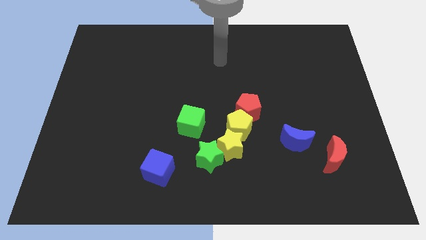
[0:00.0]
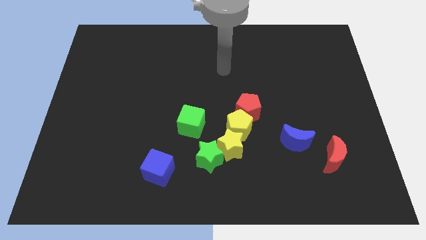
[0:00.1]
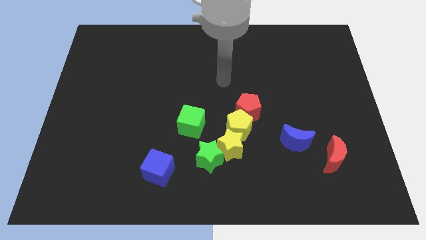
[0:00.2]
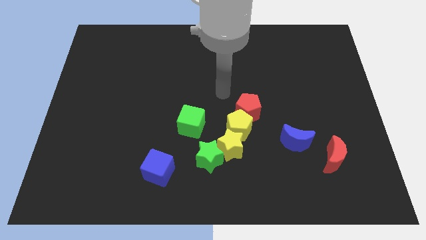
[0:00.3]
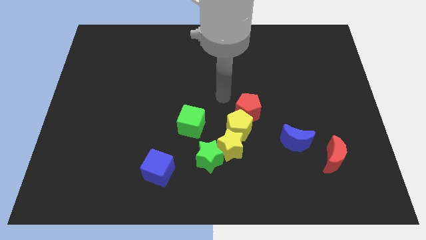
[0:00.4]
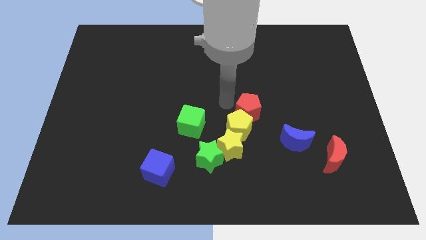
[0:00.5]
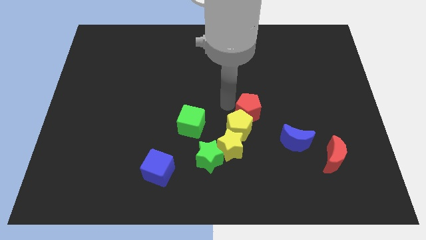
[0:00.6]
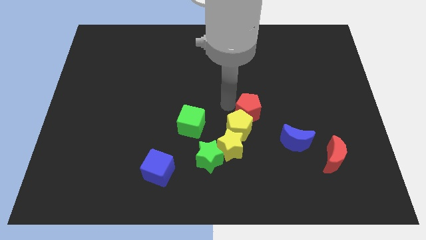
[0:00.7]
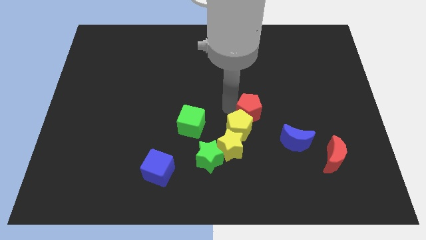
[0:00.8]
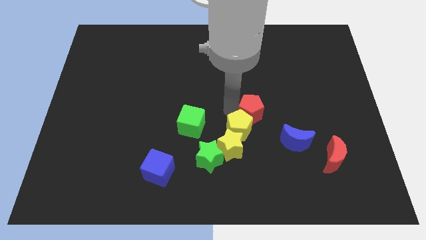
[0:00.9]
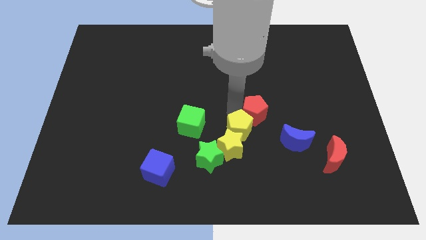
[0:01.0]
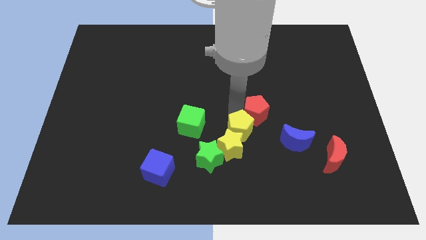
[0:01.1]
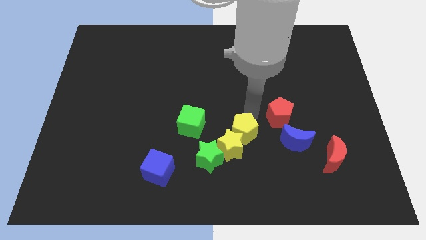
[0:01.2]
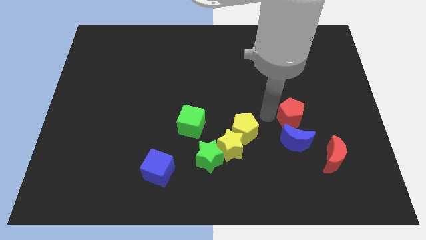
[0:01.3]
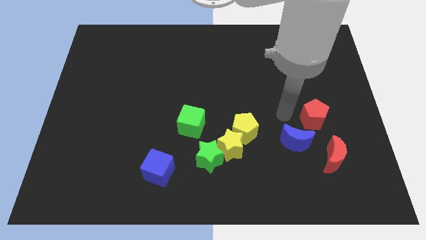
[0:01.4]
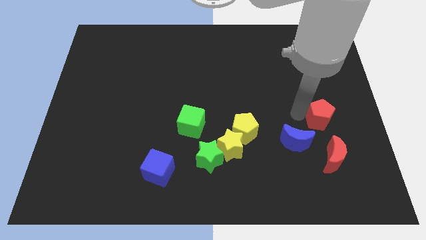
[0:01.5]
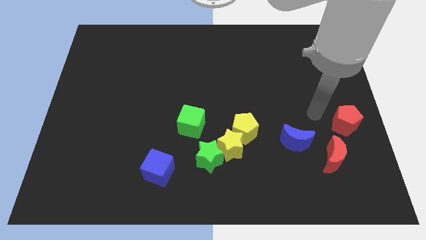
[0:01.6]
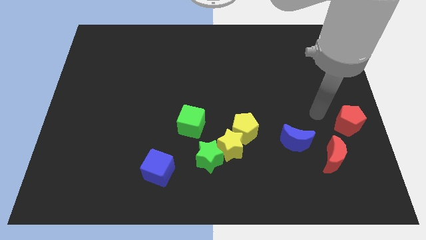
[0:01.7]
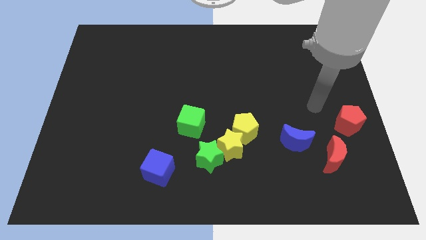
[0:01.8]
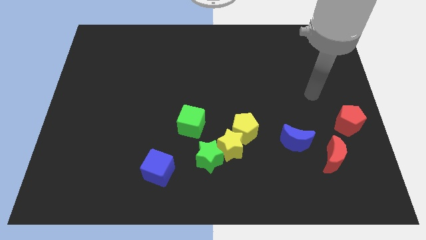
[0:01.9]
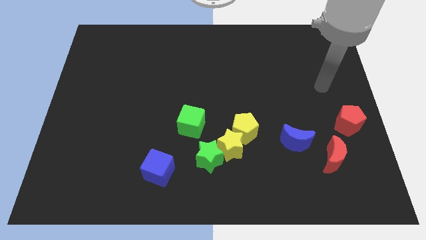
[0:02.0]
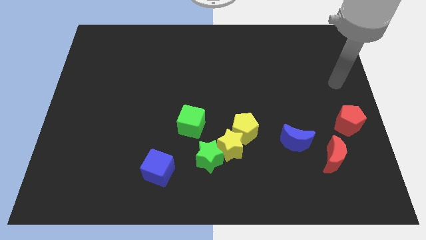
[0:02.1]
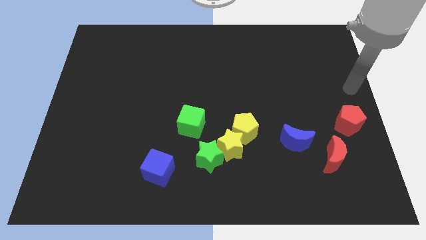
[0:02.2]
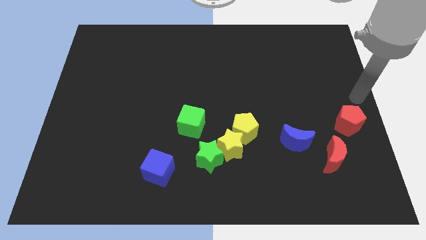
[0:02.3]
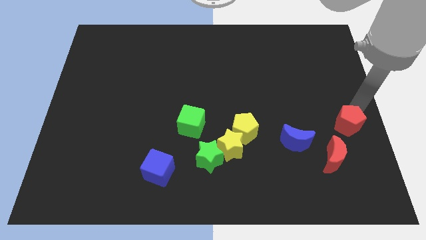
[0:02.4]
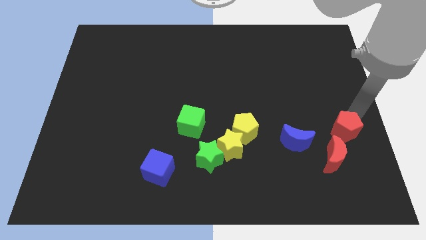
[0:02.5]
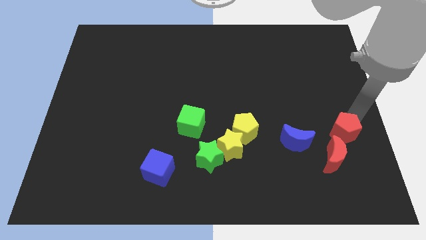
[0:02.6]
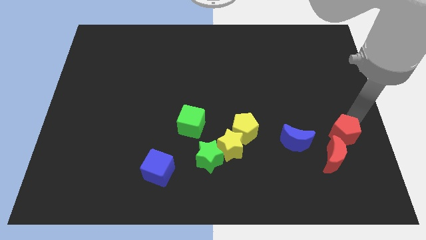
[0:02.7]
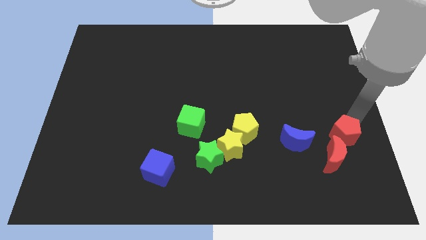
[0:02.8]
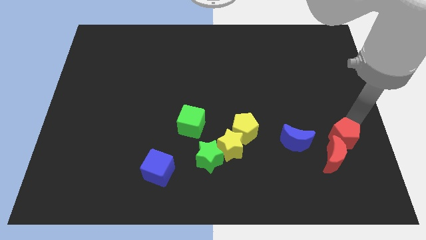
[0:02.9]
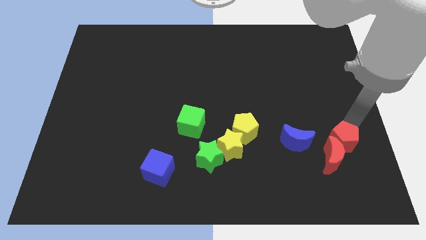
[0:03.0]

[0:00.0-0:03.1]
place the red pentagon to the top of the red moon

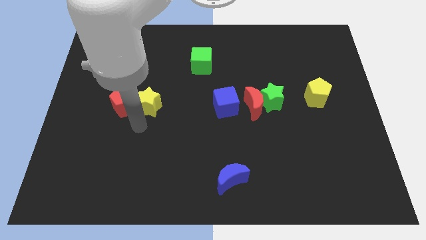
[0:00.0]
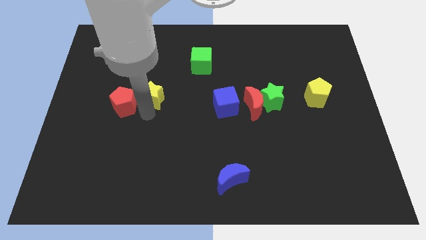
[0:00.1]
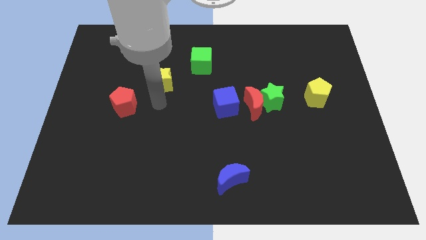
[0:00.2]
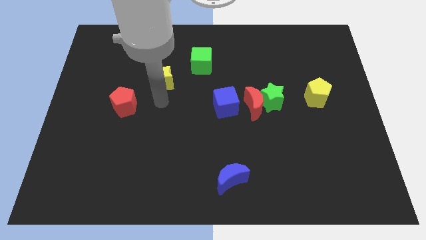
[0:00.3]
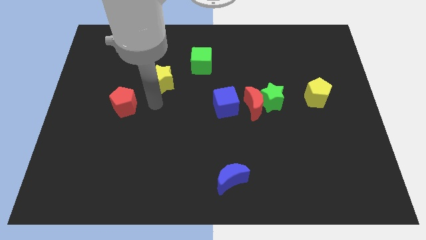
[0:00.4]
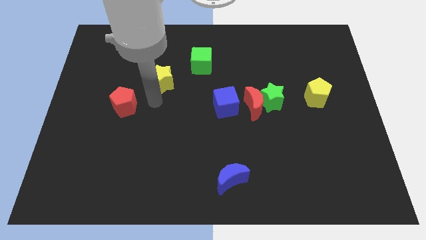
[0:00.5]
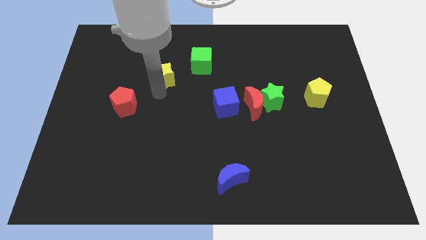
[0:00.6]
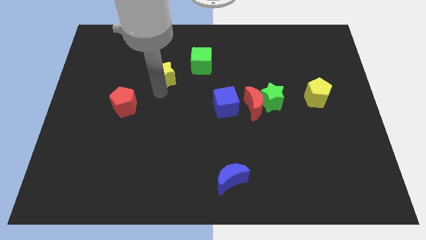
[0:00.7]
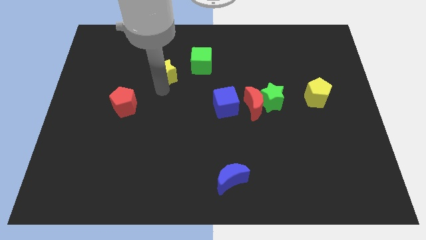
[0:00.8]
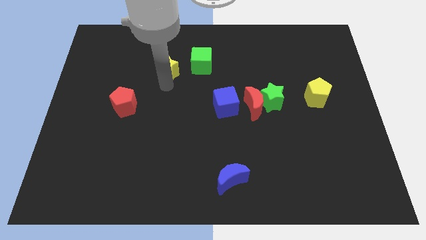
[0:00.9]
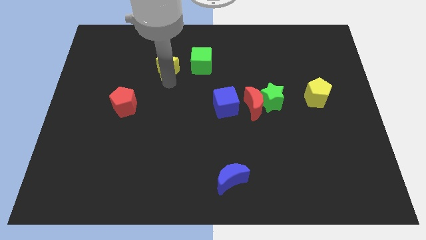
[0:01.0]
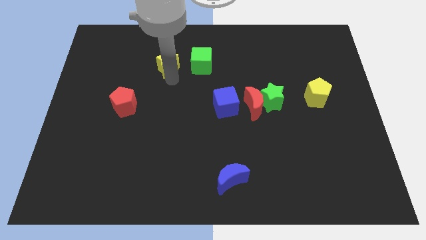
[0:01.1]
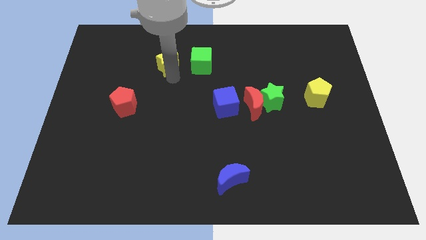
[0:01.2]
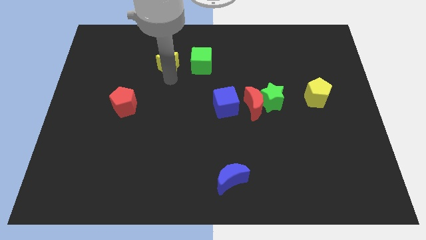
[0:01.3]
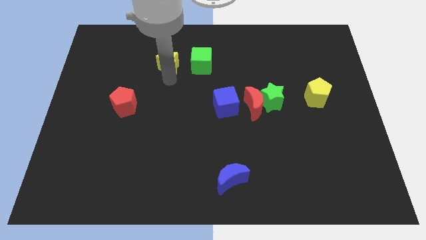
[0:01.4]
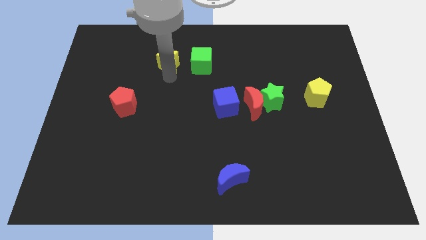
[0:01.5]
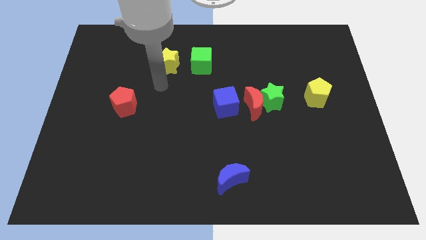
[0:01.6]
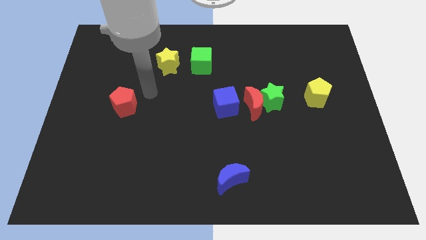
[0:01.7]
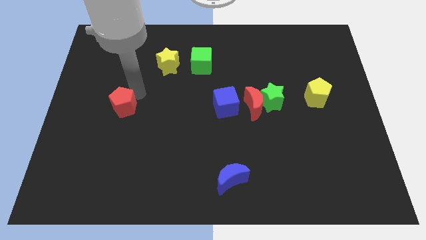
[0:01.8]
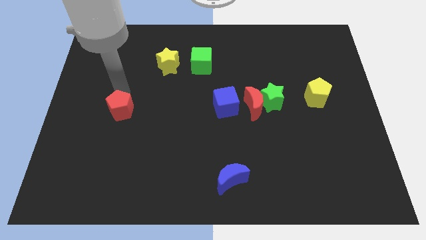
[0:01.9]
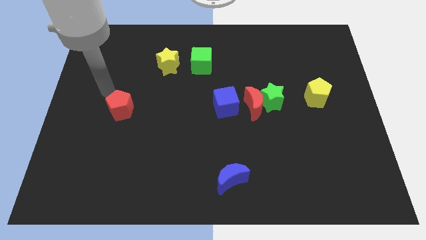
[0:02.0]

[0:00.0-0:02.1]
place the yellow star to the left of green cube

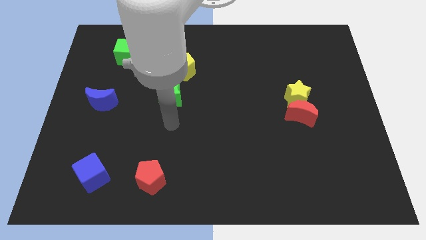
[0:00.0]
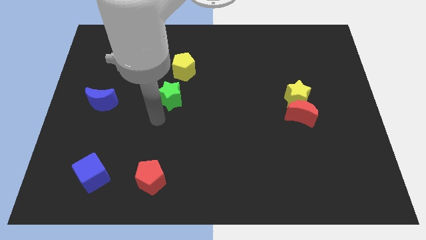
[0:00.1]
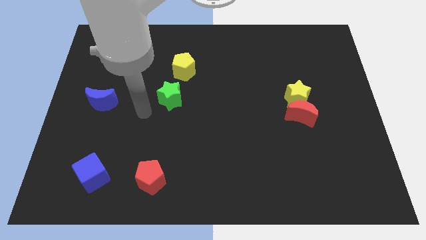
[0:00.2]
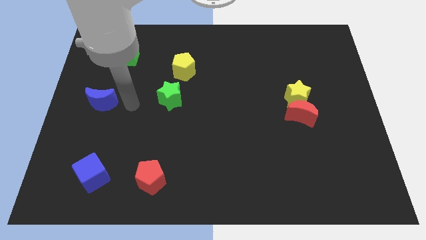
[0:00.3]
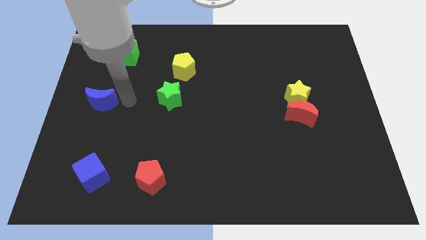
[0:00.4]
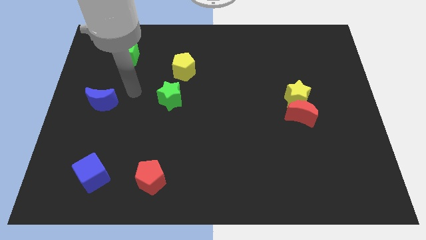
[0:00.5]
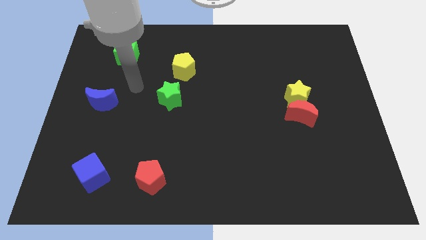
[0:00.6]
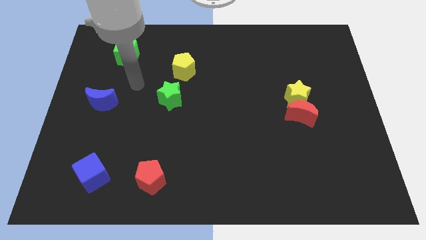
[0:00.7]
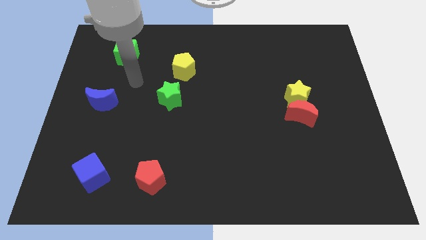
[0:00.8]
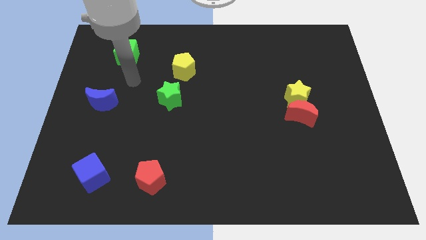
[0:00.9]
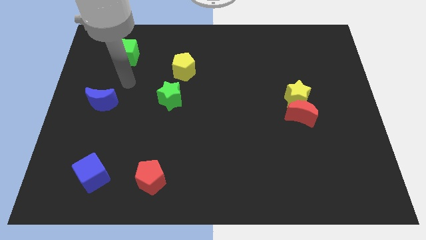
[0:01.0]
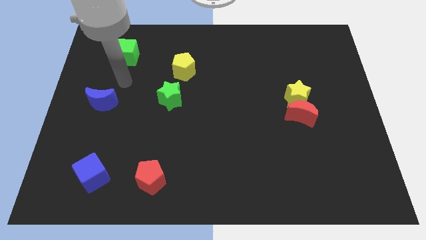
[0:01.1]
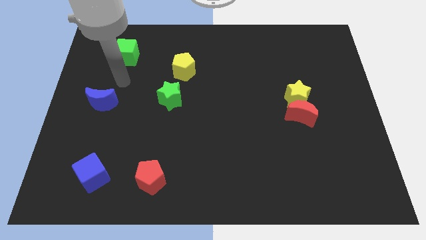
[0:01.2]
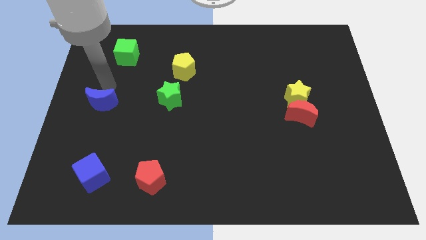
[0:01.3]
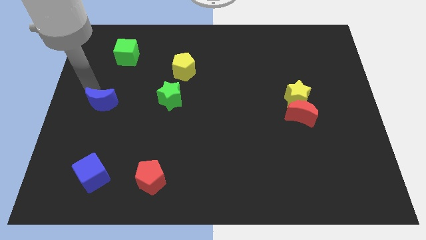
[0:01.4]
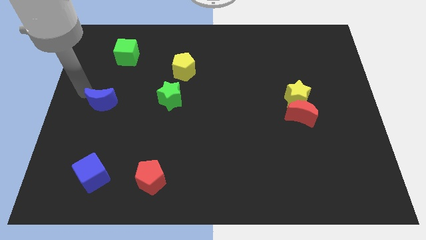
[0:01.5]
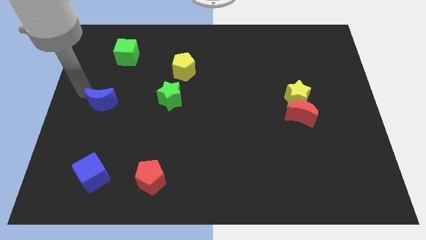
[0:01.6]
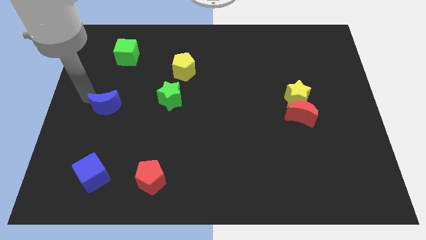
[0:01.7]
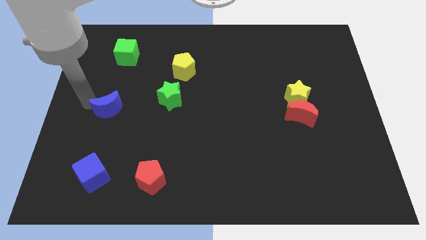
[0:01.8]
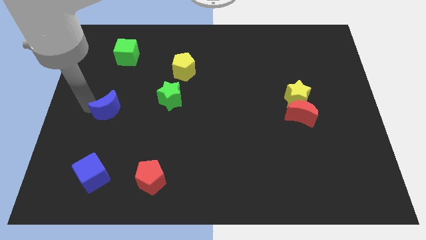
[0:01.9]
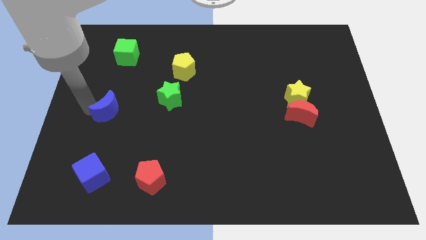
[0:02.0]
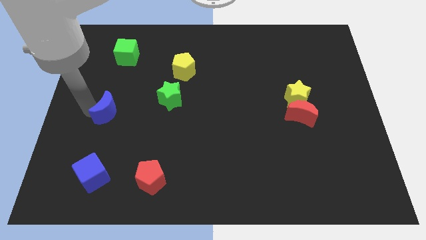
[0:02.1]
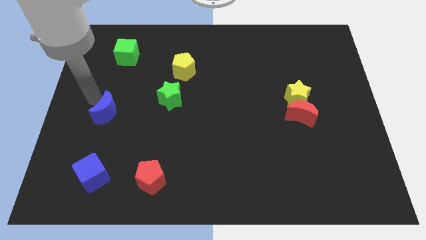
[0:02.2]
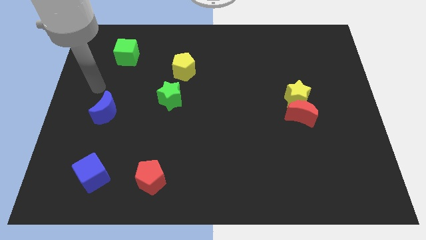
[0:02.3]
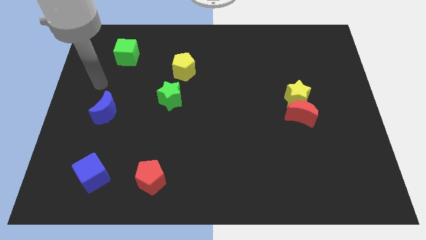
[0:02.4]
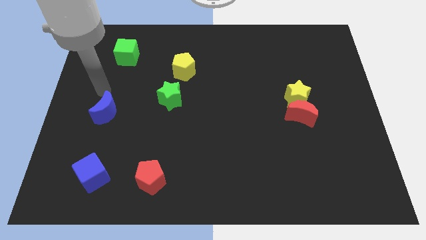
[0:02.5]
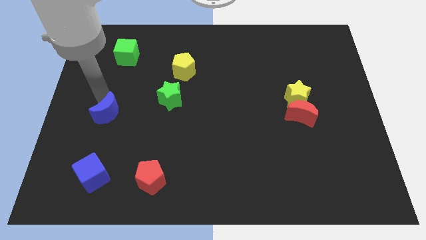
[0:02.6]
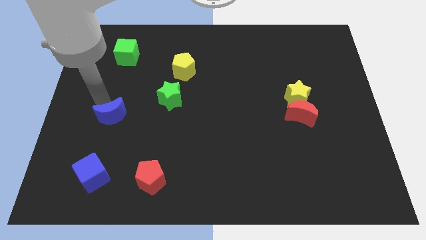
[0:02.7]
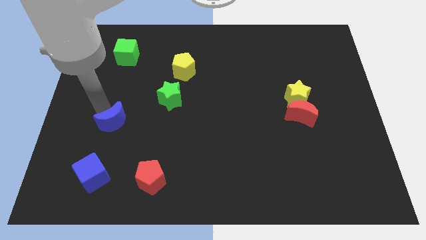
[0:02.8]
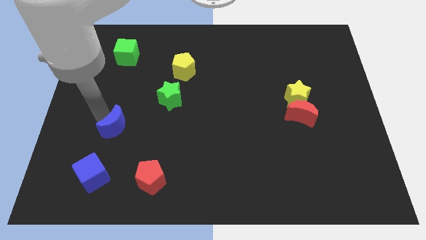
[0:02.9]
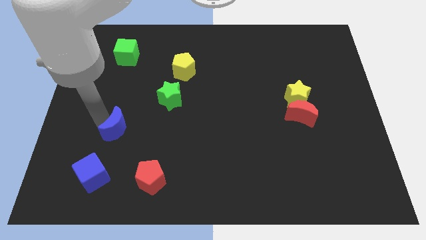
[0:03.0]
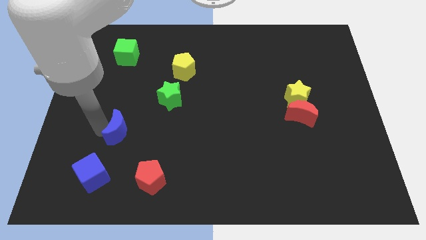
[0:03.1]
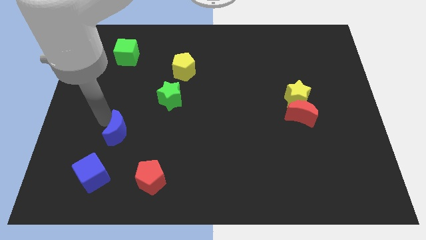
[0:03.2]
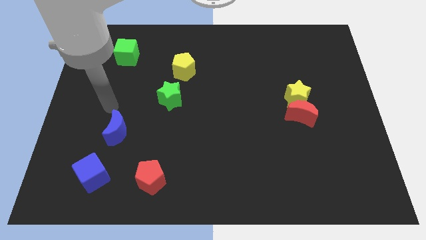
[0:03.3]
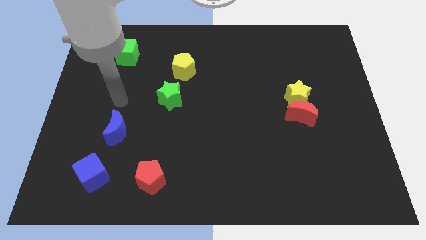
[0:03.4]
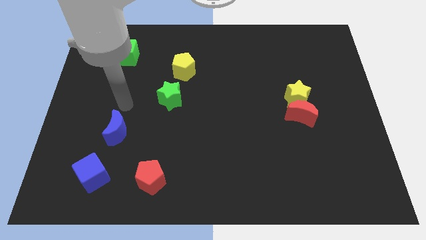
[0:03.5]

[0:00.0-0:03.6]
place the blue blue moon above the blue cube
